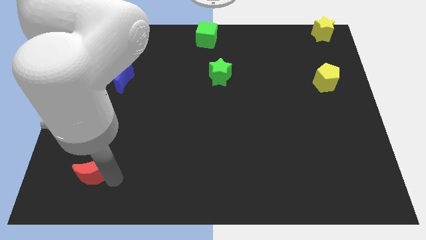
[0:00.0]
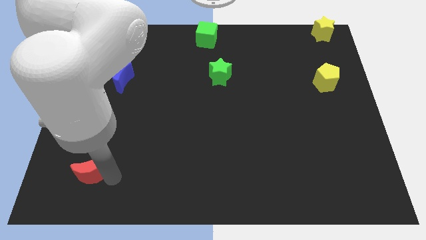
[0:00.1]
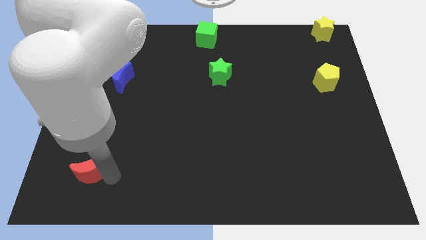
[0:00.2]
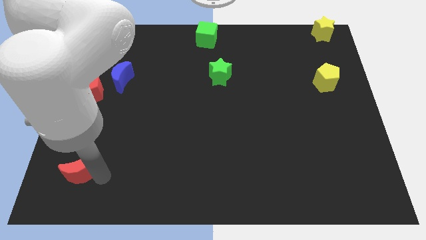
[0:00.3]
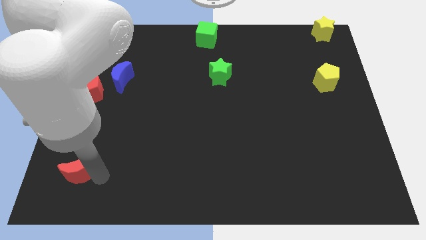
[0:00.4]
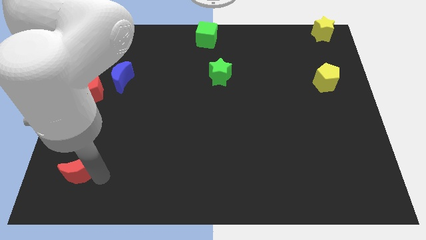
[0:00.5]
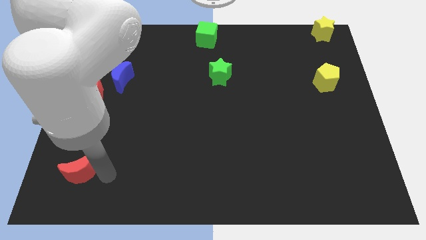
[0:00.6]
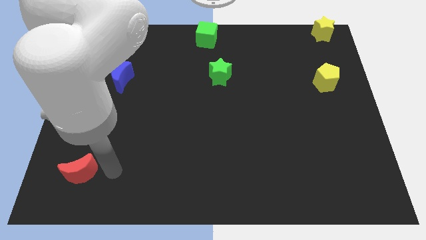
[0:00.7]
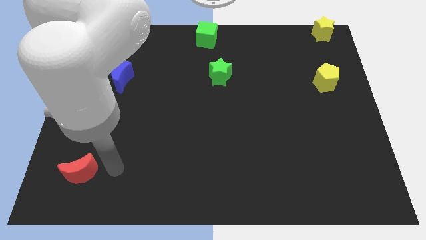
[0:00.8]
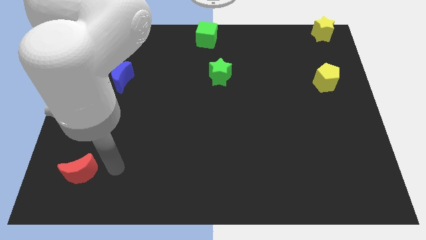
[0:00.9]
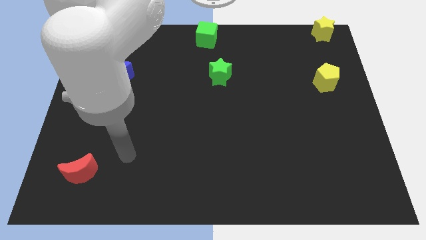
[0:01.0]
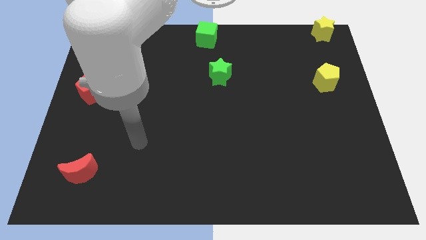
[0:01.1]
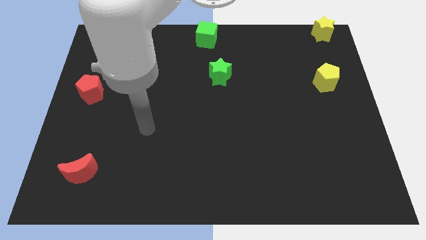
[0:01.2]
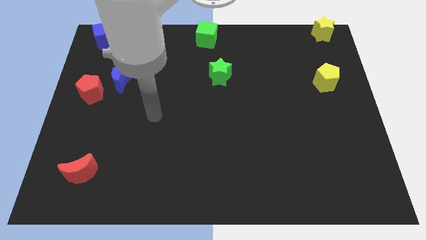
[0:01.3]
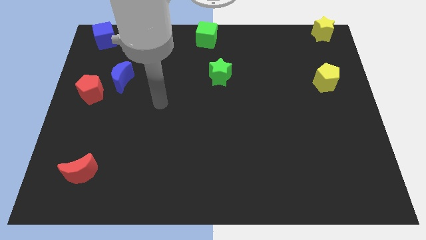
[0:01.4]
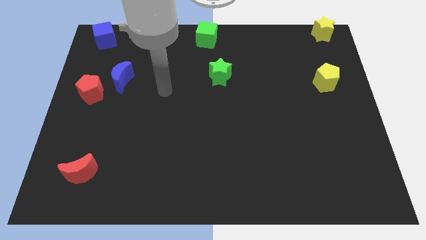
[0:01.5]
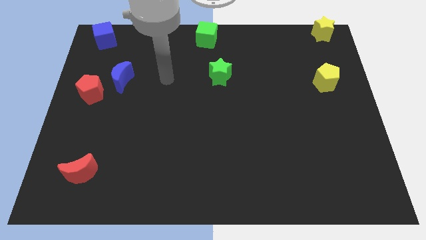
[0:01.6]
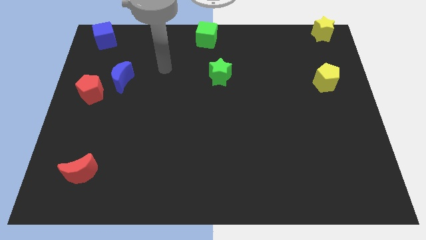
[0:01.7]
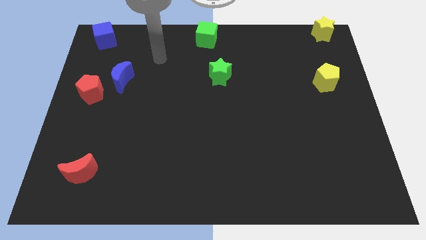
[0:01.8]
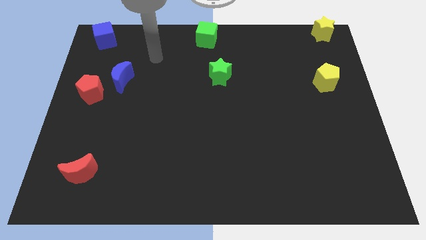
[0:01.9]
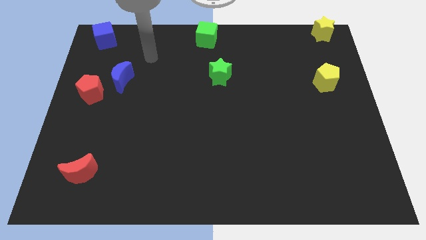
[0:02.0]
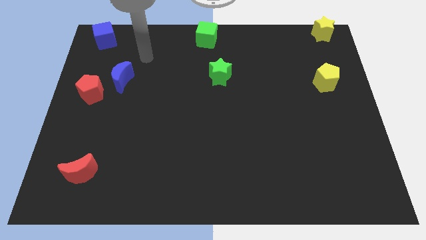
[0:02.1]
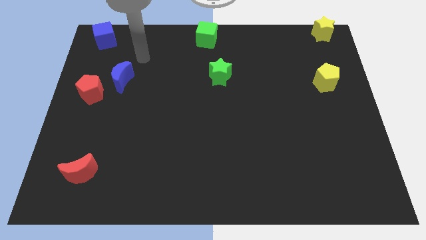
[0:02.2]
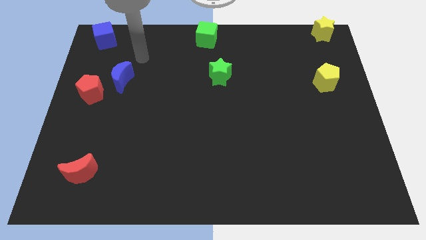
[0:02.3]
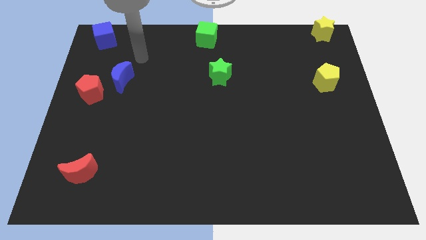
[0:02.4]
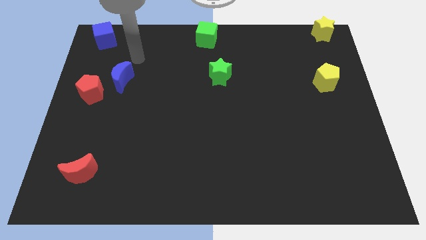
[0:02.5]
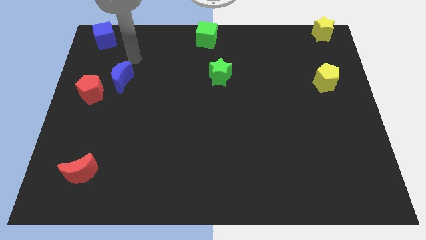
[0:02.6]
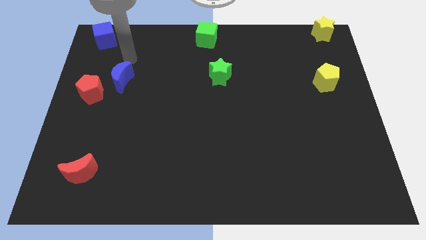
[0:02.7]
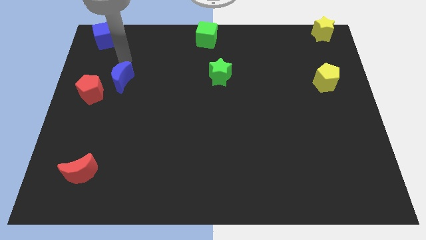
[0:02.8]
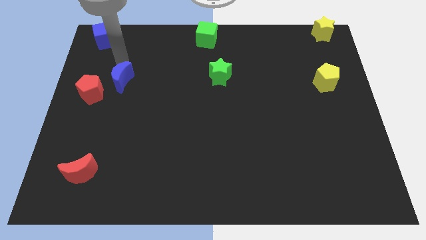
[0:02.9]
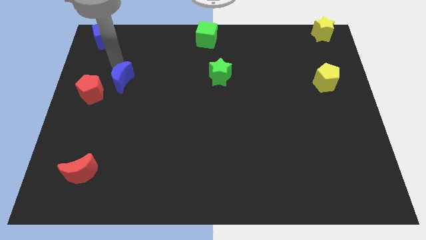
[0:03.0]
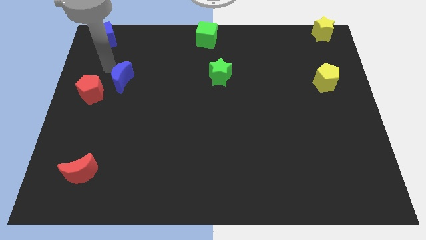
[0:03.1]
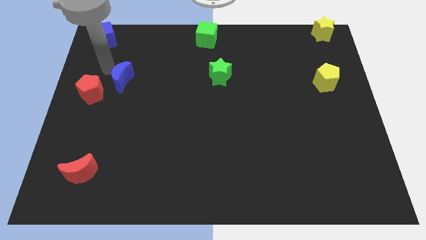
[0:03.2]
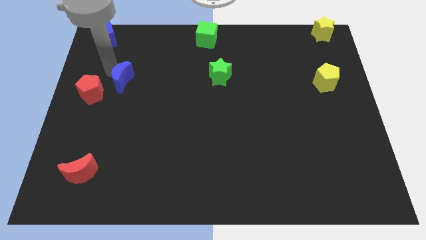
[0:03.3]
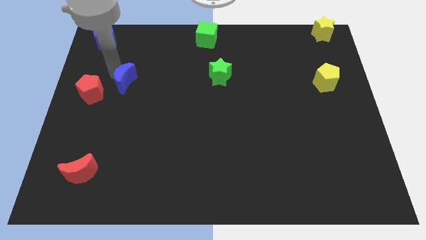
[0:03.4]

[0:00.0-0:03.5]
touch the top left of the blue moon

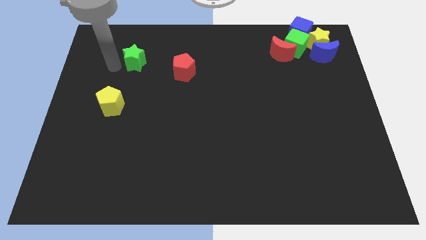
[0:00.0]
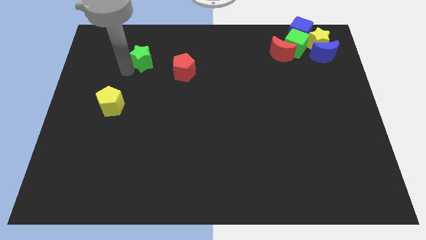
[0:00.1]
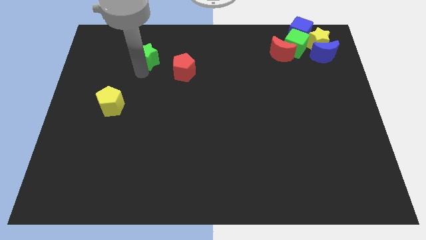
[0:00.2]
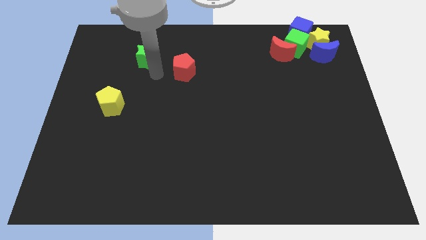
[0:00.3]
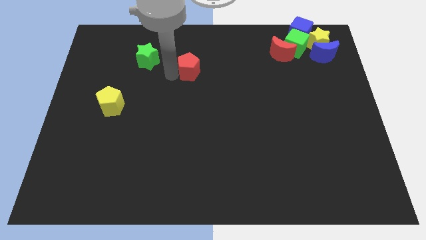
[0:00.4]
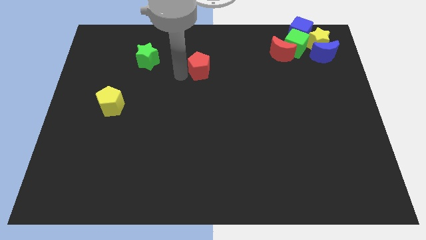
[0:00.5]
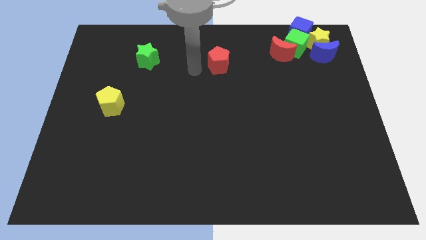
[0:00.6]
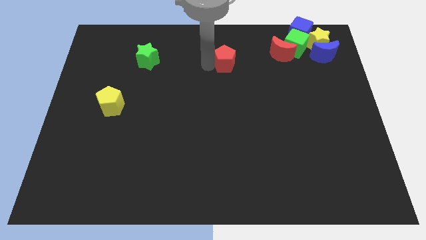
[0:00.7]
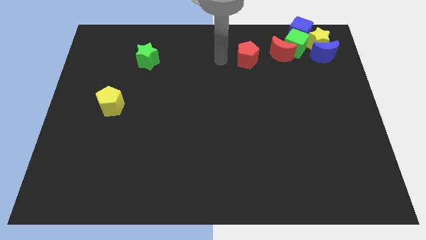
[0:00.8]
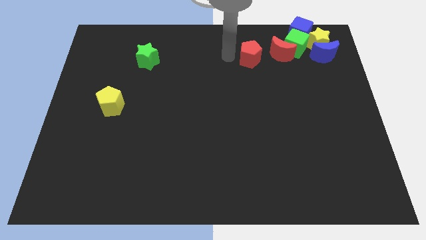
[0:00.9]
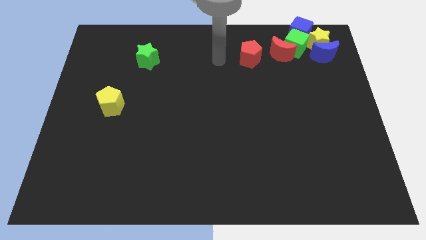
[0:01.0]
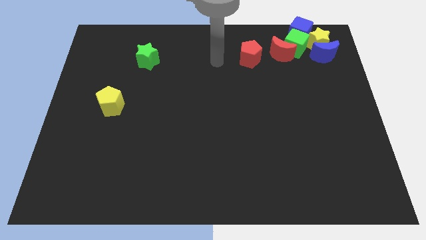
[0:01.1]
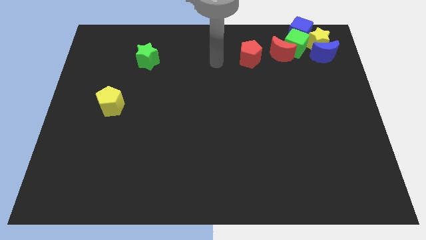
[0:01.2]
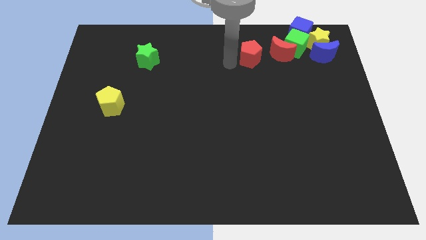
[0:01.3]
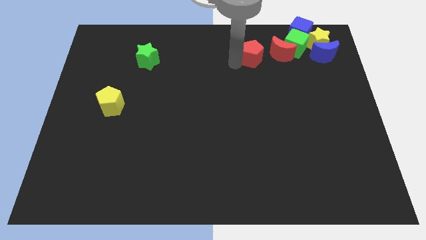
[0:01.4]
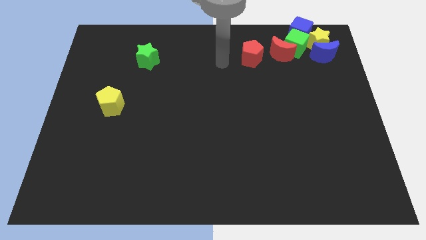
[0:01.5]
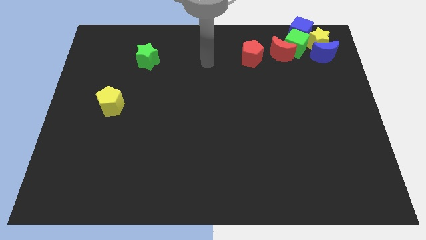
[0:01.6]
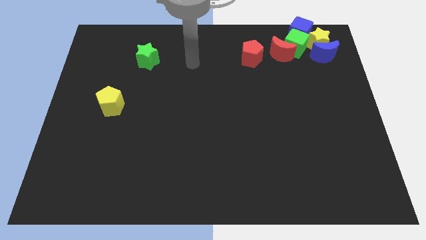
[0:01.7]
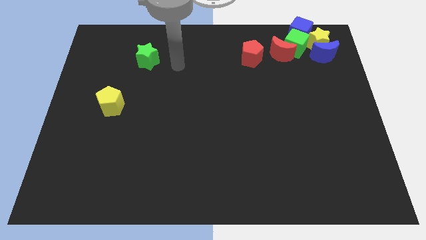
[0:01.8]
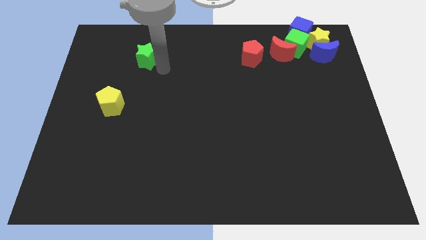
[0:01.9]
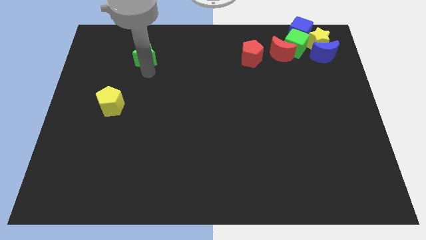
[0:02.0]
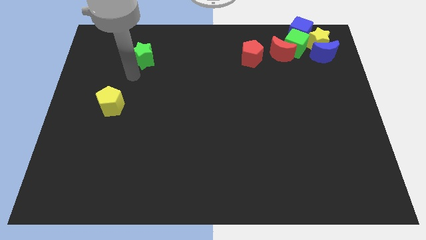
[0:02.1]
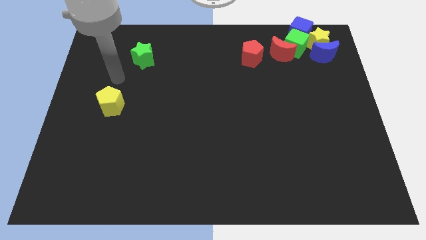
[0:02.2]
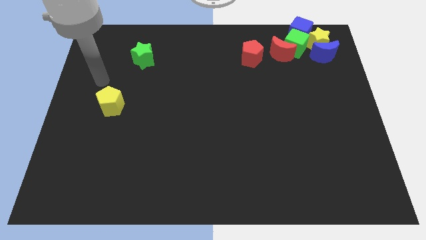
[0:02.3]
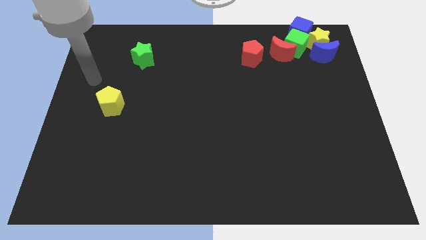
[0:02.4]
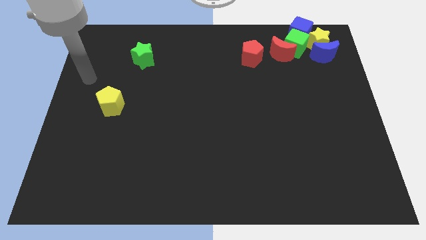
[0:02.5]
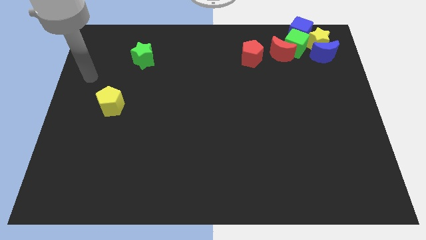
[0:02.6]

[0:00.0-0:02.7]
move red pentagon to the left of red moon

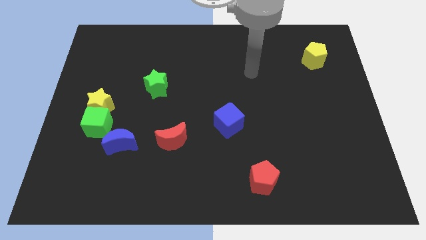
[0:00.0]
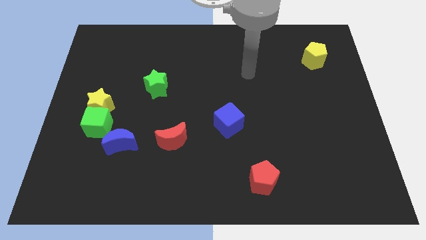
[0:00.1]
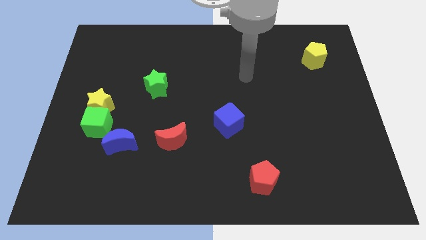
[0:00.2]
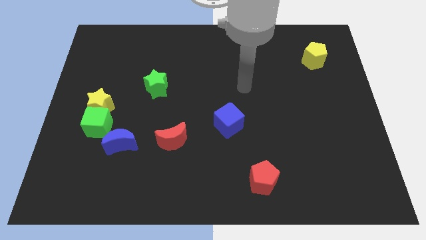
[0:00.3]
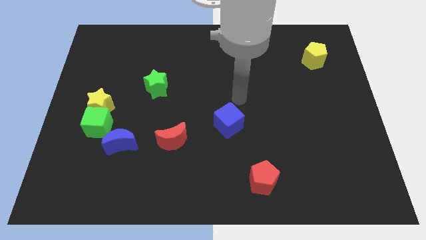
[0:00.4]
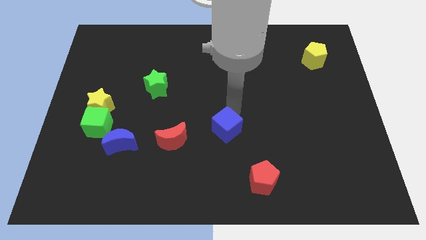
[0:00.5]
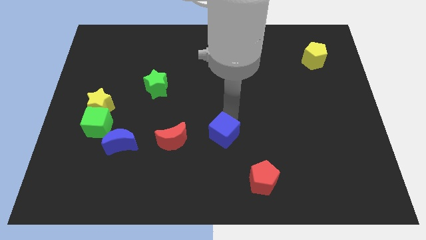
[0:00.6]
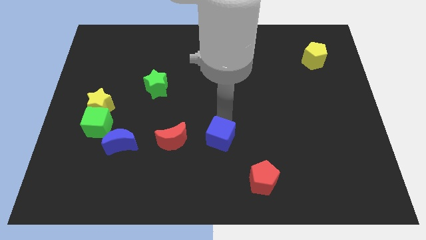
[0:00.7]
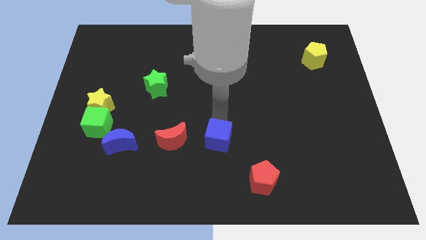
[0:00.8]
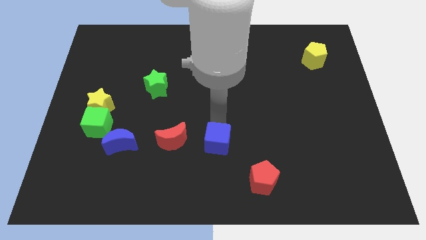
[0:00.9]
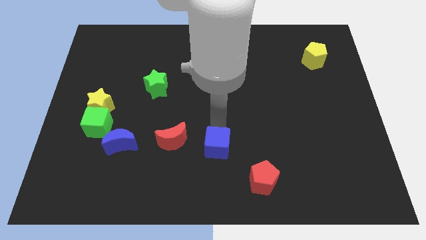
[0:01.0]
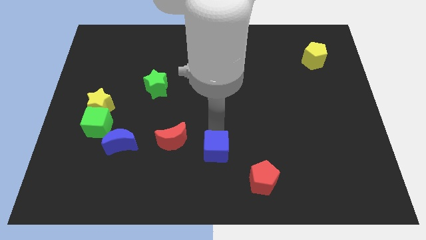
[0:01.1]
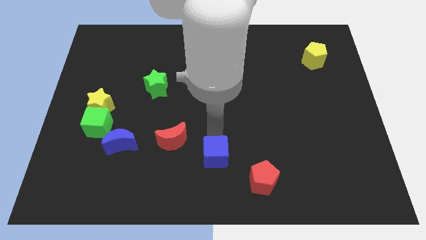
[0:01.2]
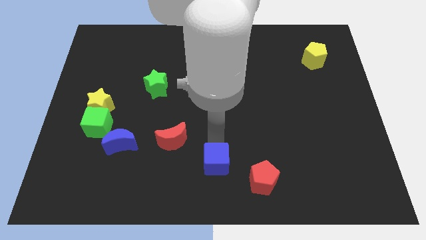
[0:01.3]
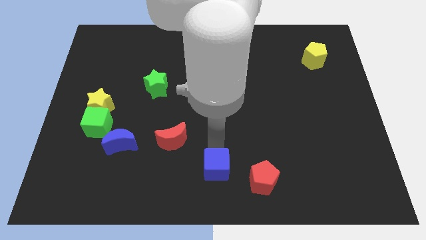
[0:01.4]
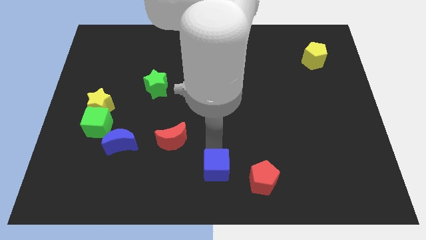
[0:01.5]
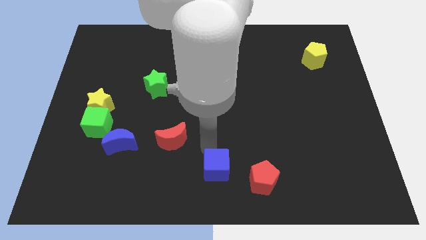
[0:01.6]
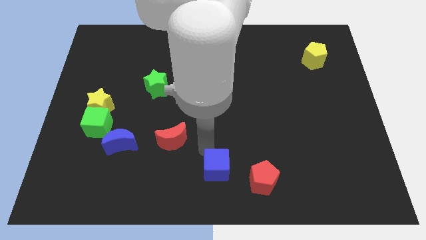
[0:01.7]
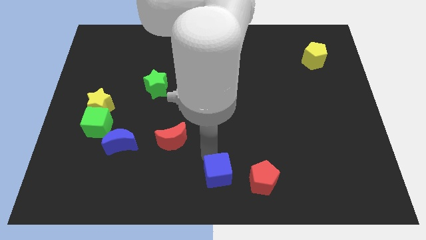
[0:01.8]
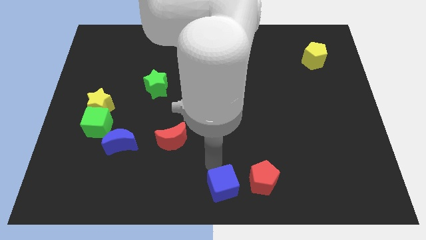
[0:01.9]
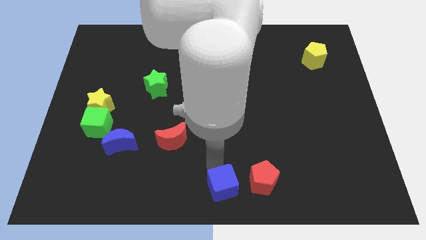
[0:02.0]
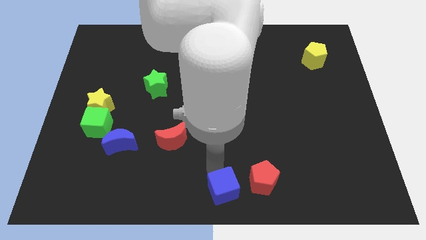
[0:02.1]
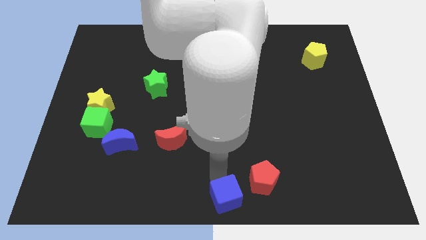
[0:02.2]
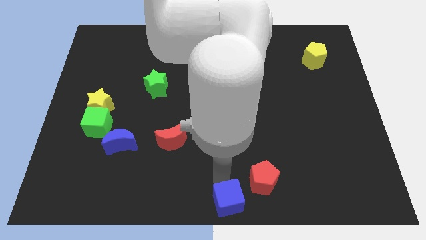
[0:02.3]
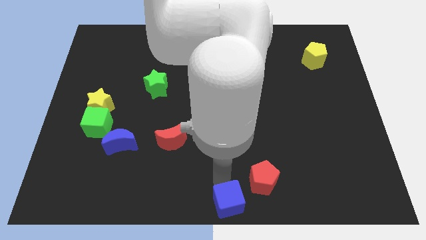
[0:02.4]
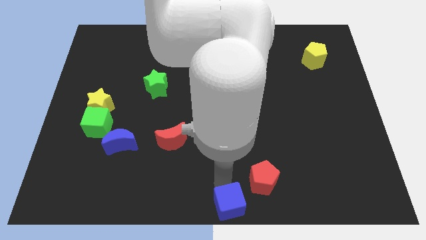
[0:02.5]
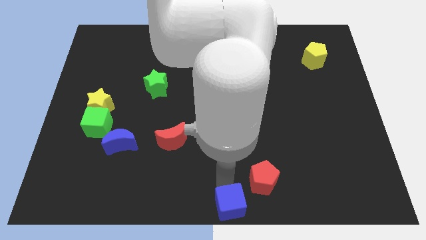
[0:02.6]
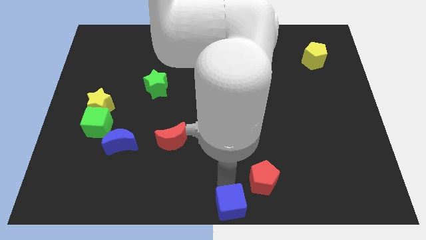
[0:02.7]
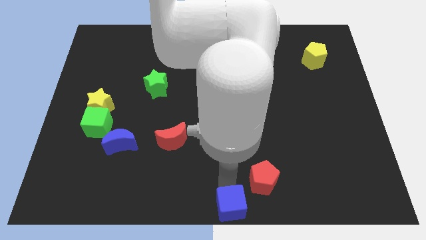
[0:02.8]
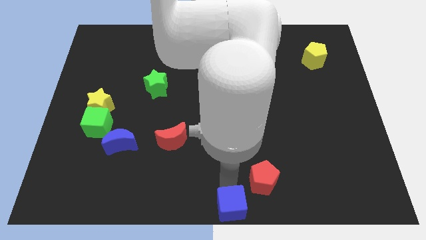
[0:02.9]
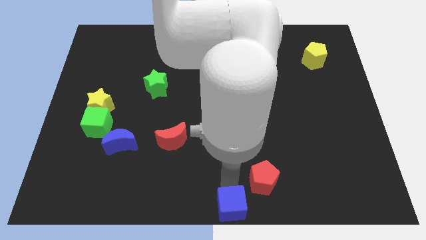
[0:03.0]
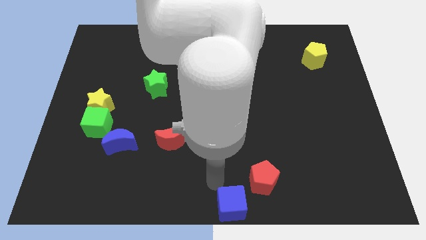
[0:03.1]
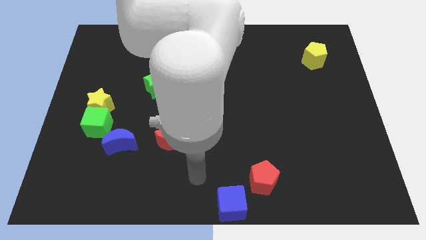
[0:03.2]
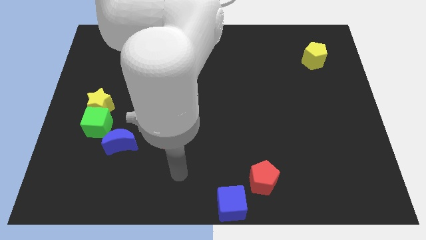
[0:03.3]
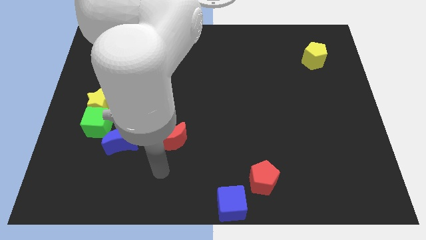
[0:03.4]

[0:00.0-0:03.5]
move the blue cube to the bottom center of the board
